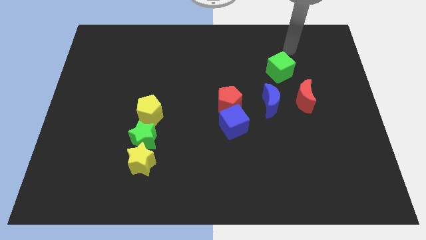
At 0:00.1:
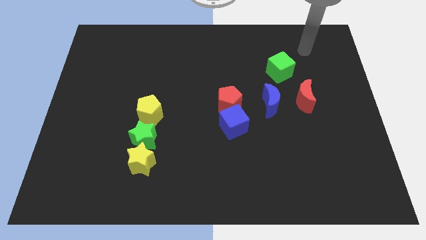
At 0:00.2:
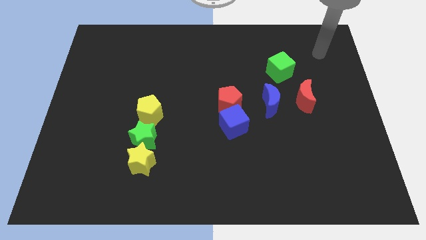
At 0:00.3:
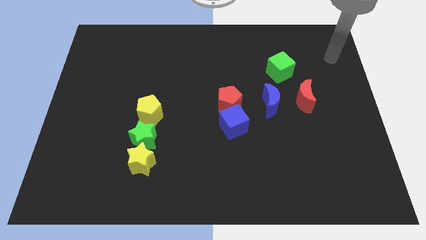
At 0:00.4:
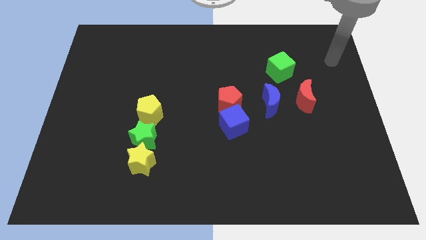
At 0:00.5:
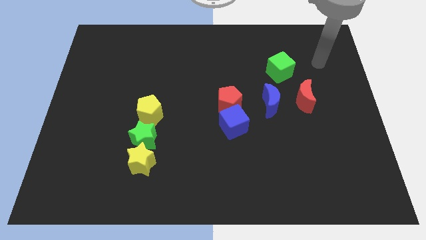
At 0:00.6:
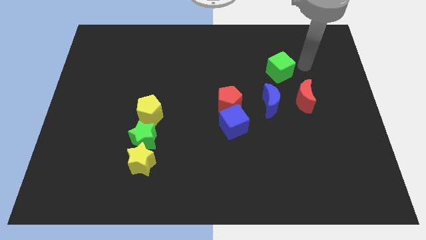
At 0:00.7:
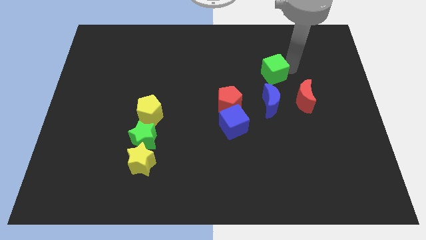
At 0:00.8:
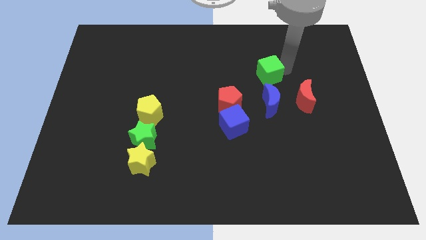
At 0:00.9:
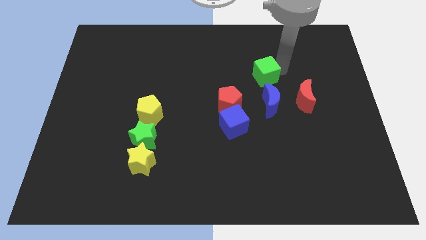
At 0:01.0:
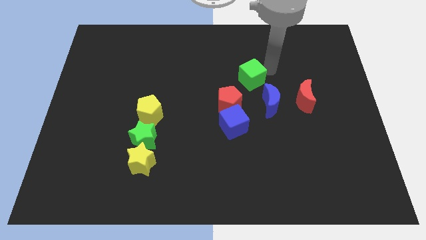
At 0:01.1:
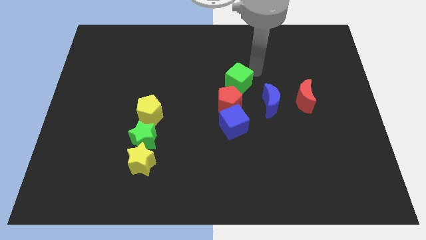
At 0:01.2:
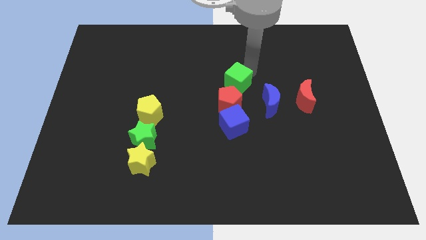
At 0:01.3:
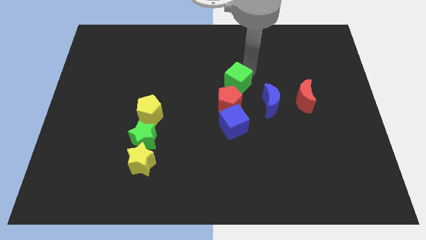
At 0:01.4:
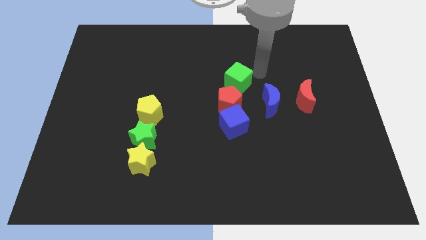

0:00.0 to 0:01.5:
move the green cube diagonally top left to the blue moon

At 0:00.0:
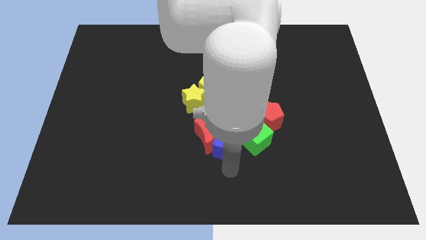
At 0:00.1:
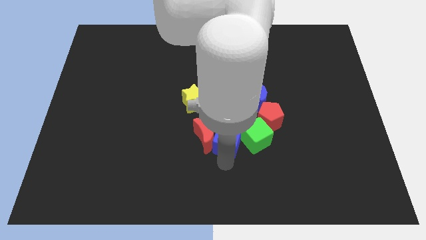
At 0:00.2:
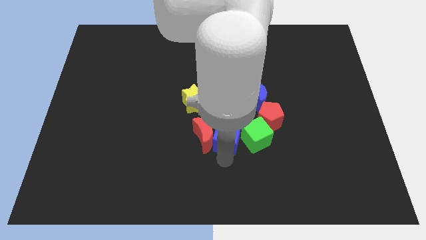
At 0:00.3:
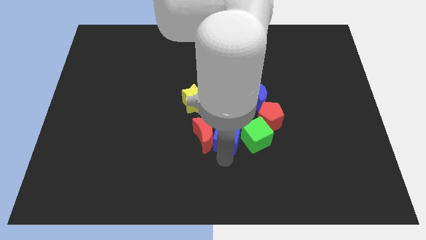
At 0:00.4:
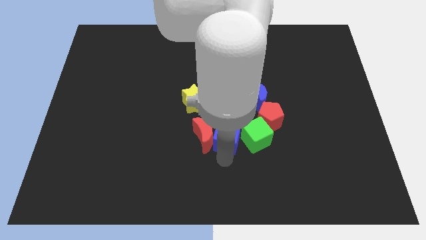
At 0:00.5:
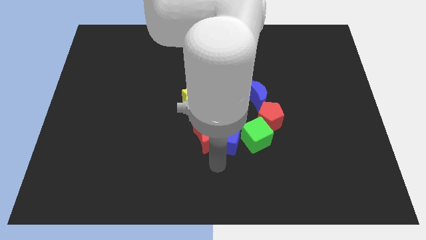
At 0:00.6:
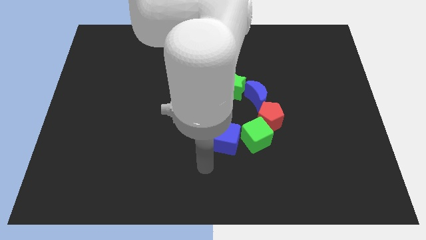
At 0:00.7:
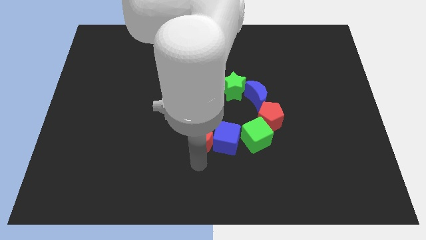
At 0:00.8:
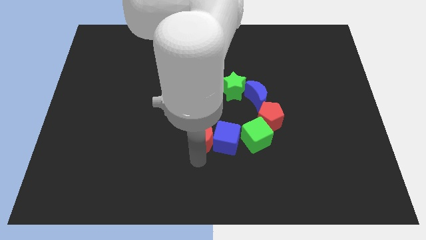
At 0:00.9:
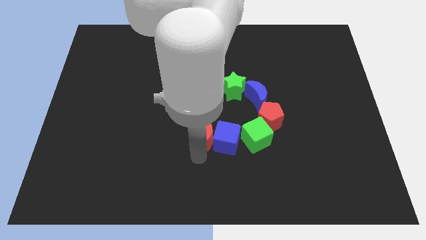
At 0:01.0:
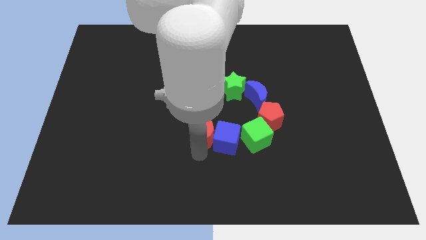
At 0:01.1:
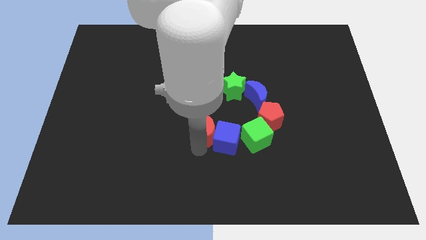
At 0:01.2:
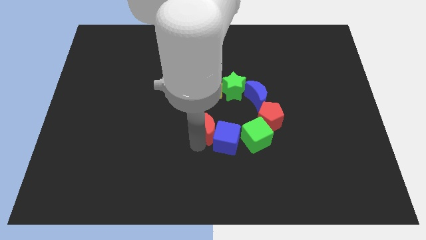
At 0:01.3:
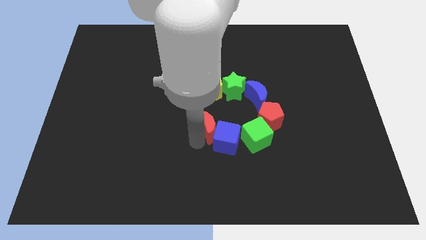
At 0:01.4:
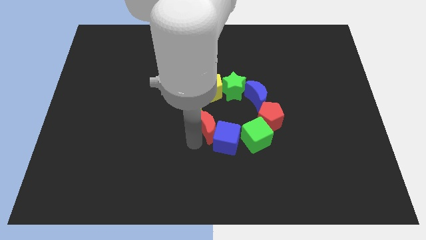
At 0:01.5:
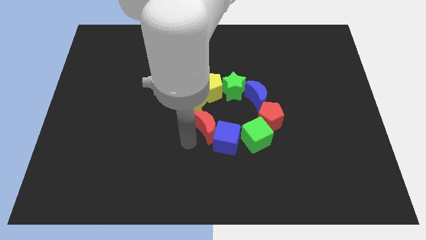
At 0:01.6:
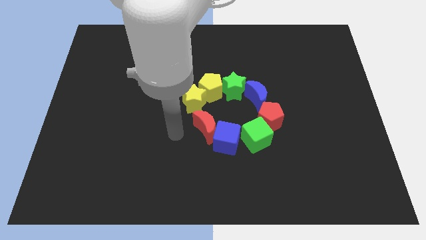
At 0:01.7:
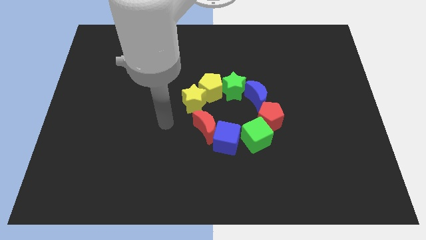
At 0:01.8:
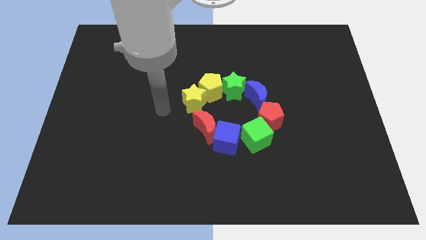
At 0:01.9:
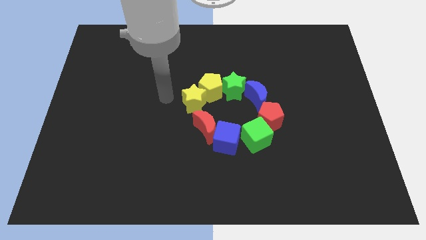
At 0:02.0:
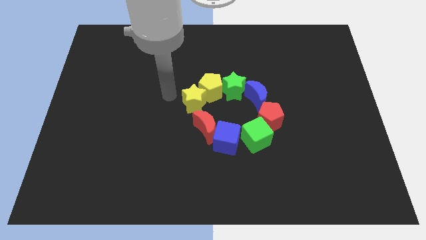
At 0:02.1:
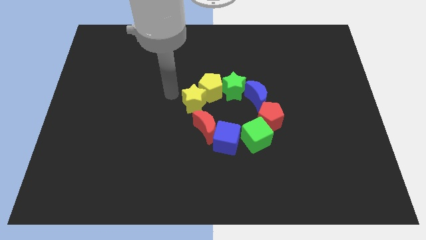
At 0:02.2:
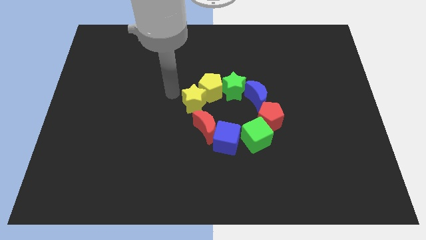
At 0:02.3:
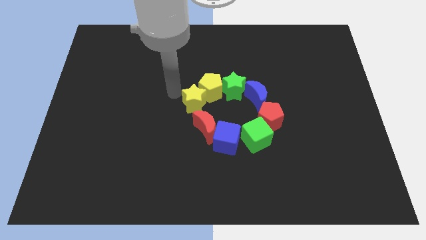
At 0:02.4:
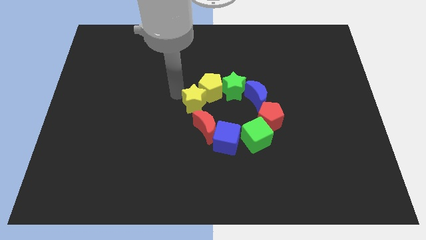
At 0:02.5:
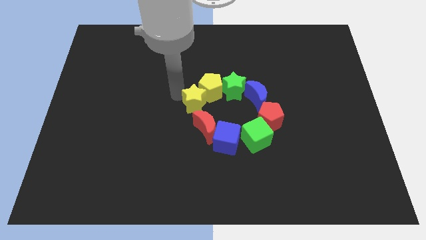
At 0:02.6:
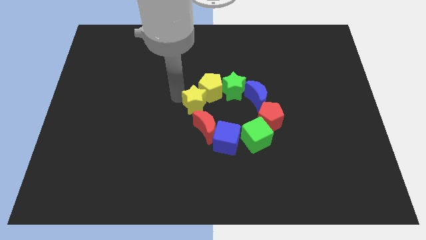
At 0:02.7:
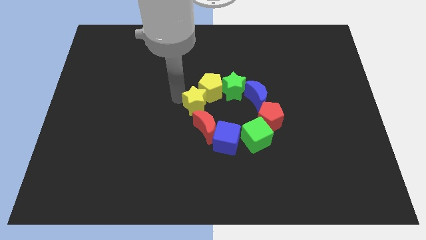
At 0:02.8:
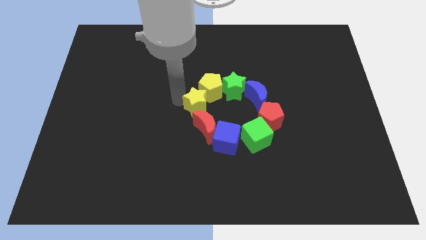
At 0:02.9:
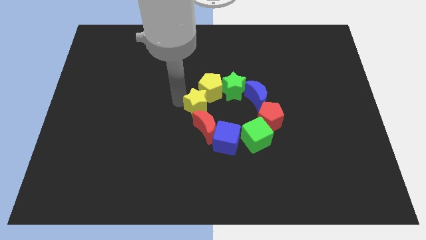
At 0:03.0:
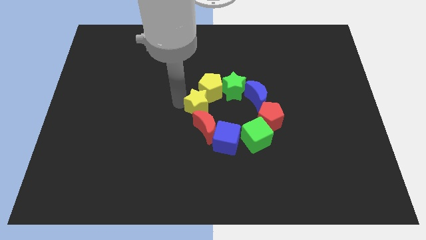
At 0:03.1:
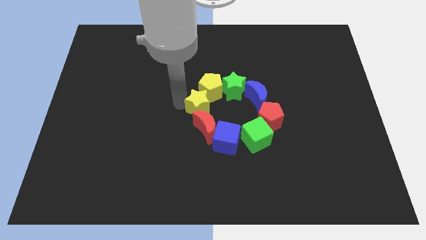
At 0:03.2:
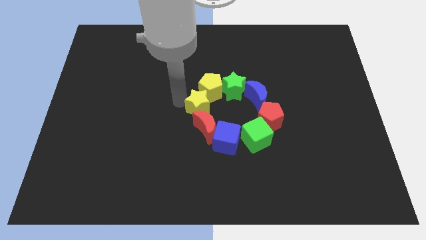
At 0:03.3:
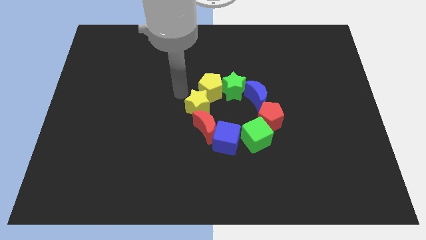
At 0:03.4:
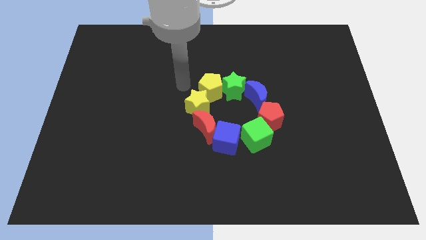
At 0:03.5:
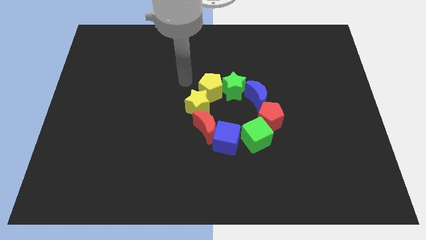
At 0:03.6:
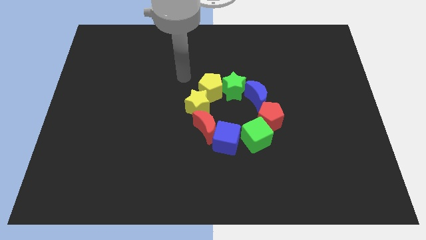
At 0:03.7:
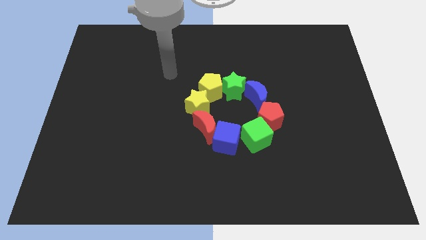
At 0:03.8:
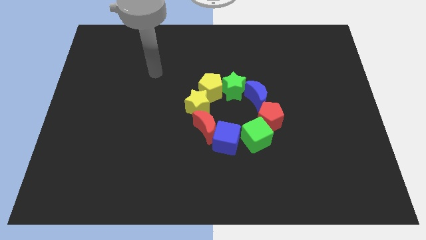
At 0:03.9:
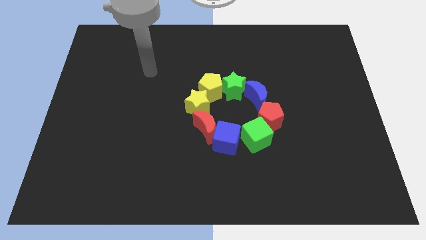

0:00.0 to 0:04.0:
adjust group of blocks to form a circle at the centre of the board

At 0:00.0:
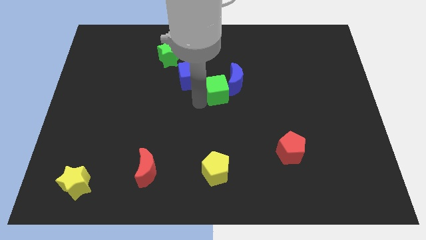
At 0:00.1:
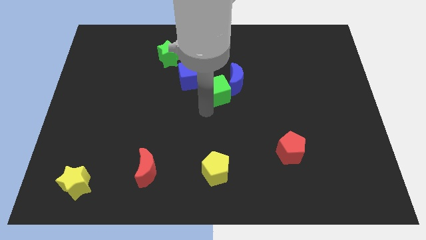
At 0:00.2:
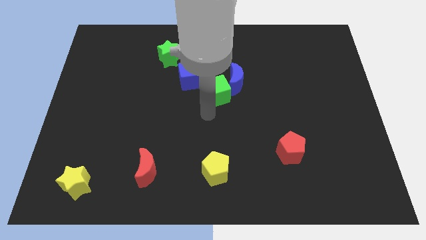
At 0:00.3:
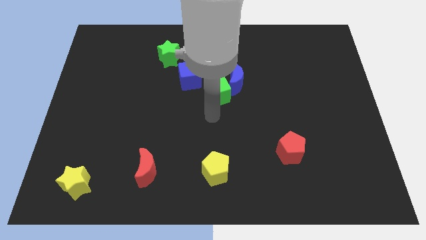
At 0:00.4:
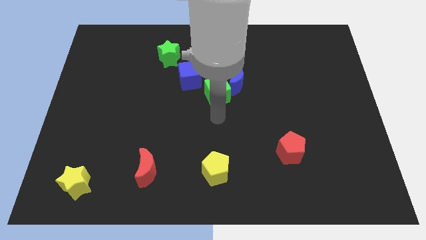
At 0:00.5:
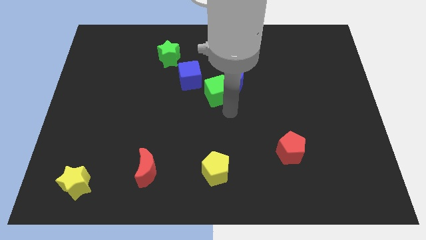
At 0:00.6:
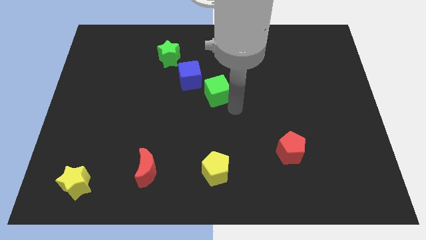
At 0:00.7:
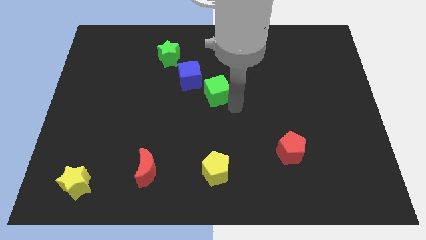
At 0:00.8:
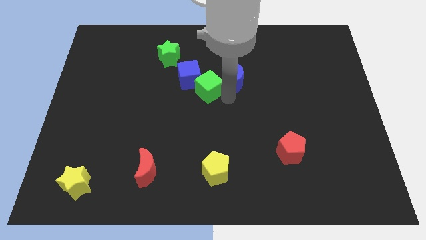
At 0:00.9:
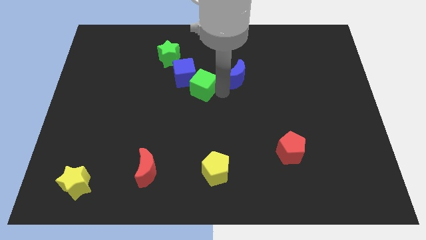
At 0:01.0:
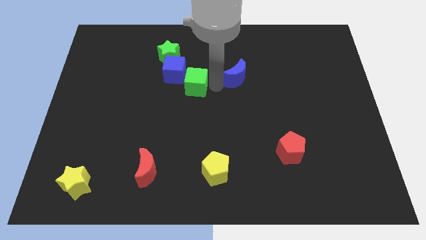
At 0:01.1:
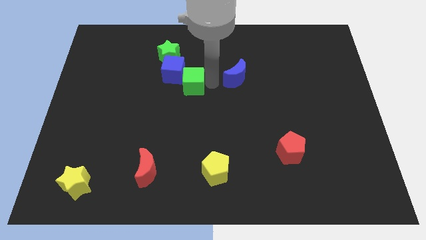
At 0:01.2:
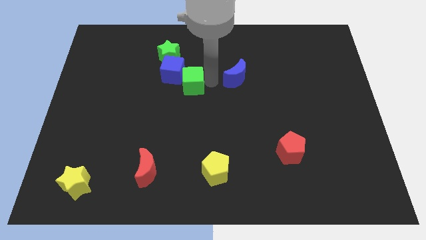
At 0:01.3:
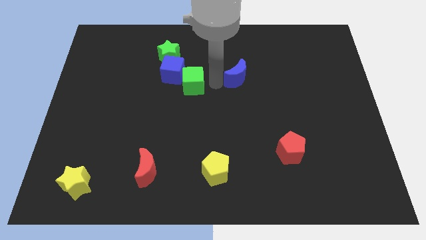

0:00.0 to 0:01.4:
push the blue cube with the green cube

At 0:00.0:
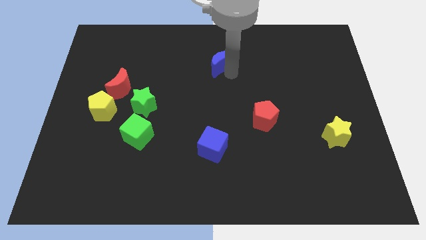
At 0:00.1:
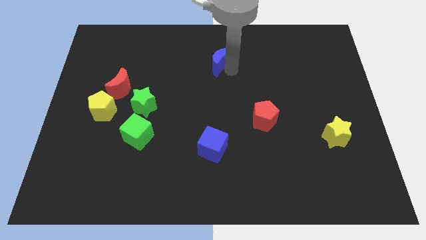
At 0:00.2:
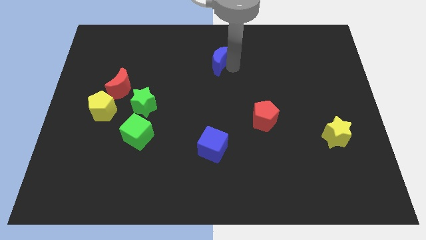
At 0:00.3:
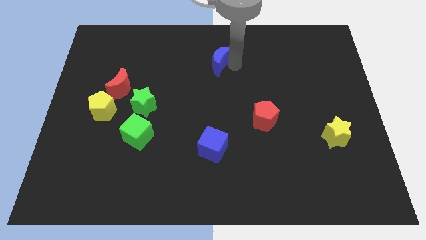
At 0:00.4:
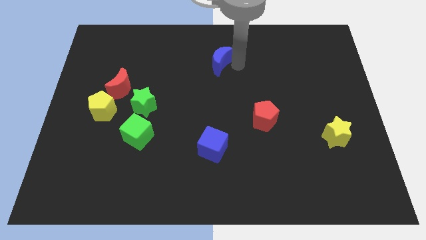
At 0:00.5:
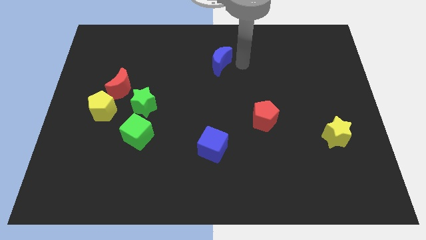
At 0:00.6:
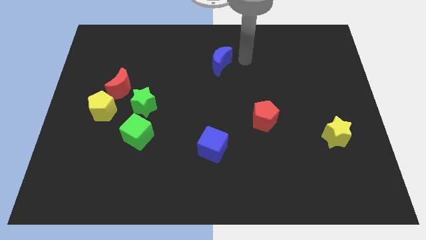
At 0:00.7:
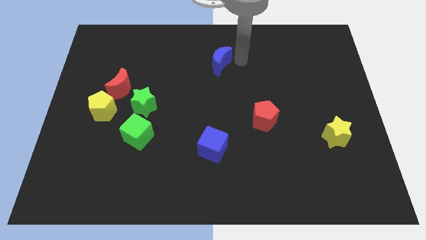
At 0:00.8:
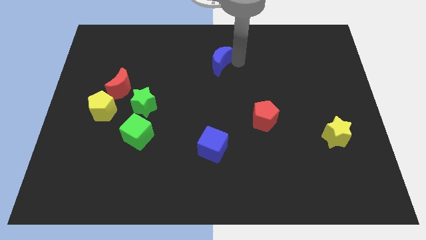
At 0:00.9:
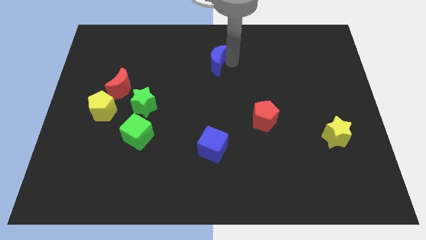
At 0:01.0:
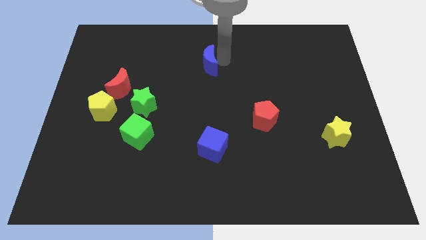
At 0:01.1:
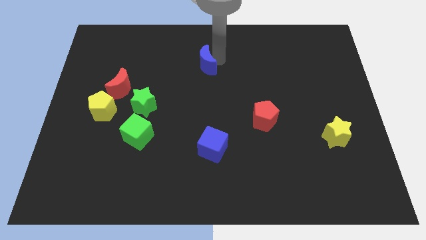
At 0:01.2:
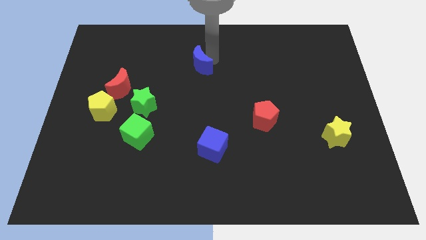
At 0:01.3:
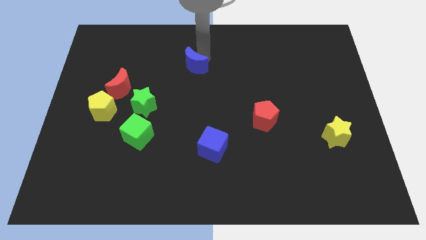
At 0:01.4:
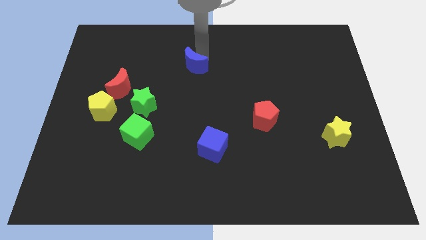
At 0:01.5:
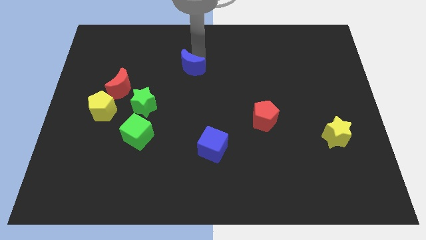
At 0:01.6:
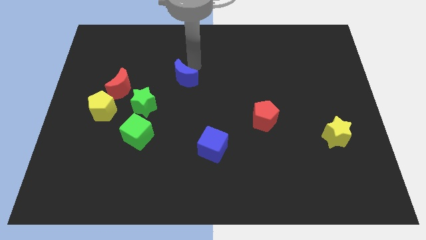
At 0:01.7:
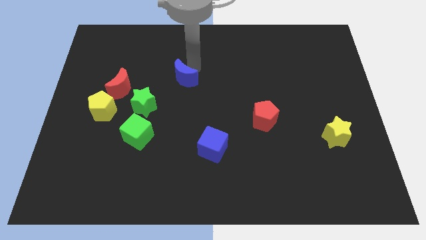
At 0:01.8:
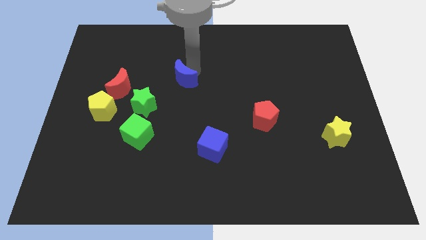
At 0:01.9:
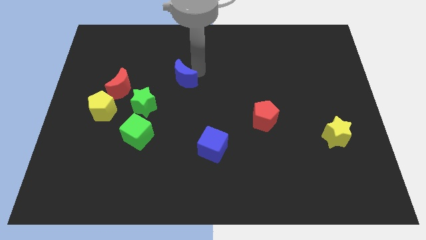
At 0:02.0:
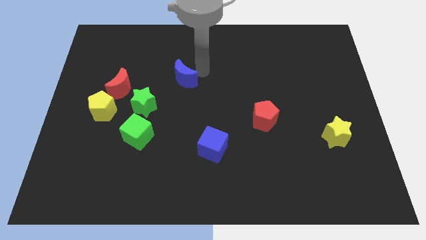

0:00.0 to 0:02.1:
put the blue crescent diagonal to the red pentagon

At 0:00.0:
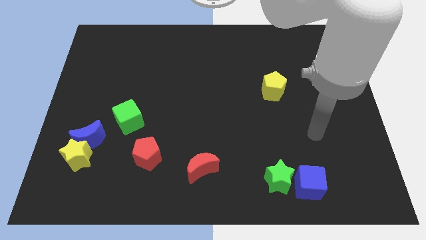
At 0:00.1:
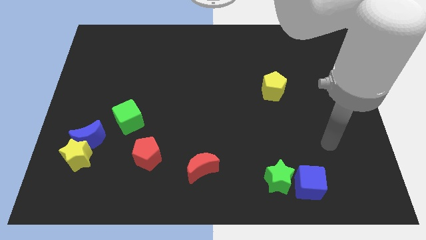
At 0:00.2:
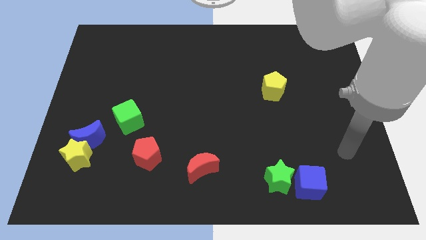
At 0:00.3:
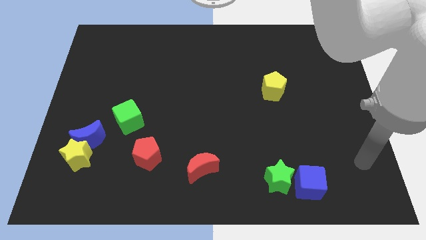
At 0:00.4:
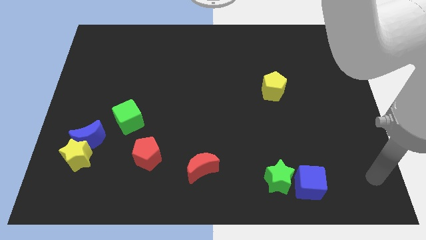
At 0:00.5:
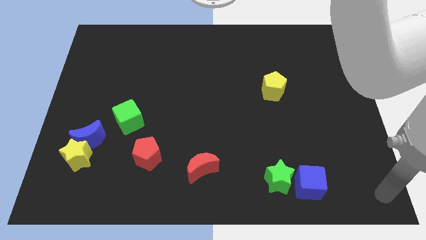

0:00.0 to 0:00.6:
place arm at bottom right corner
